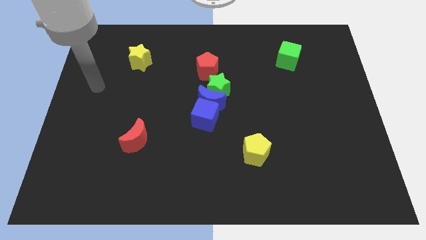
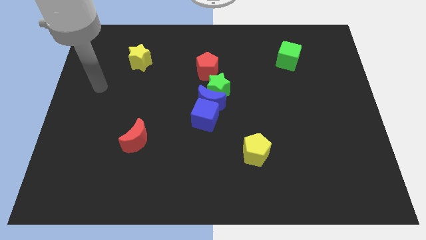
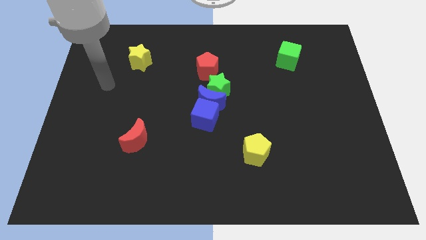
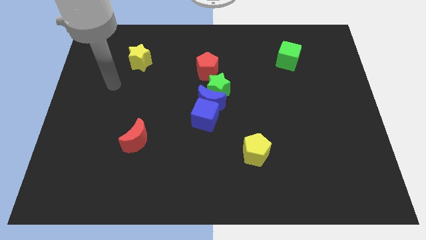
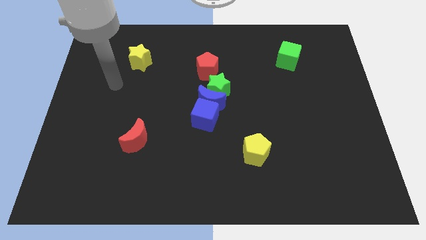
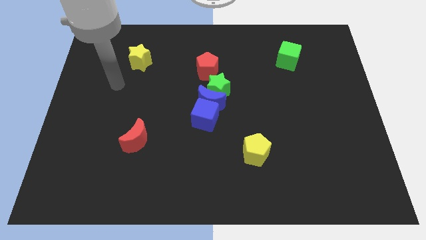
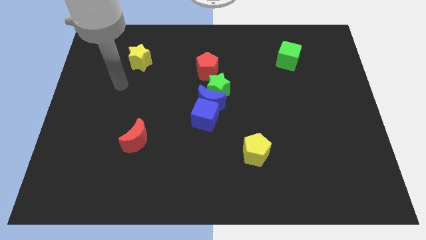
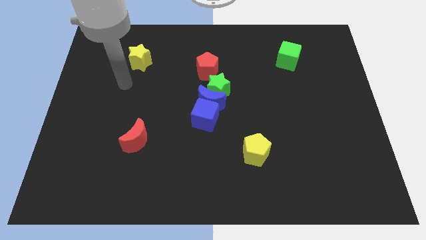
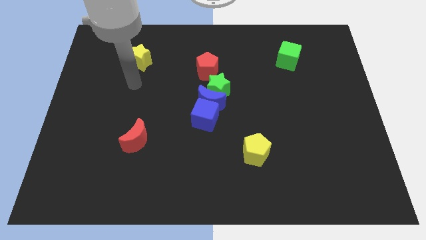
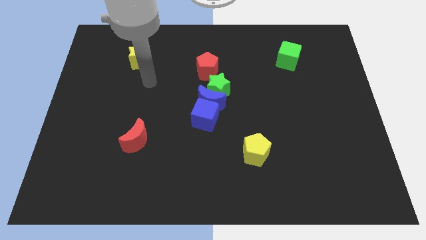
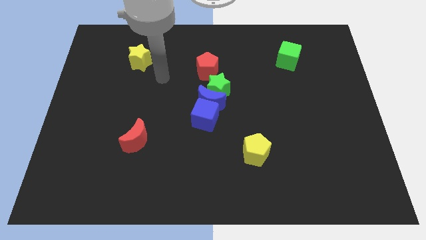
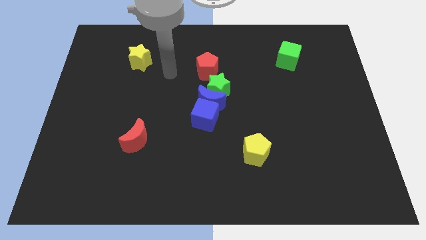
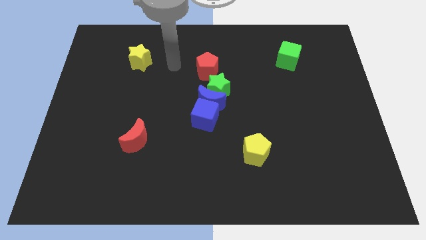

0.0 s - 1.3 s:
point your hand at the left side of the red pentagon

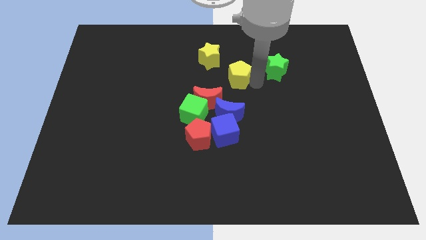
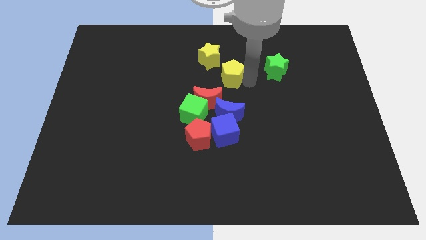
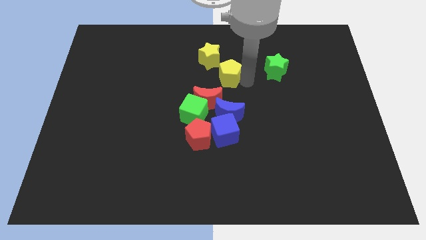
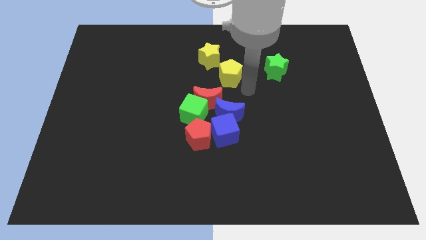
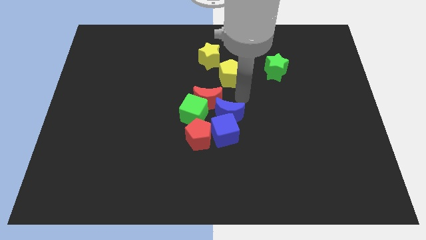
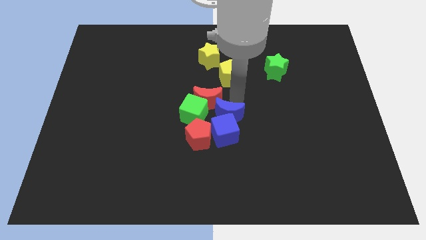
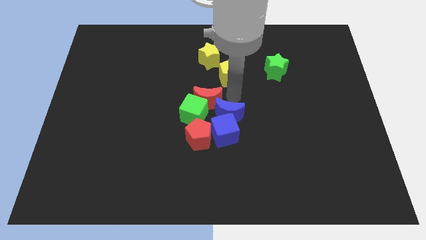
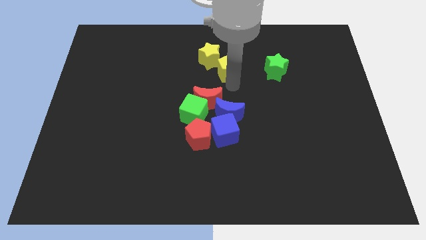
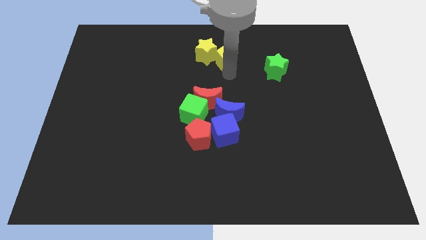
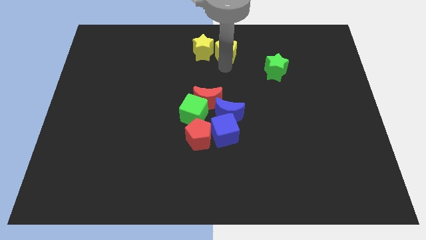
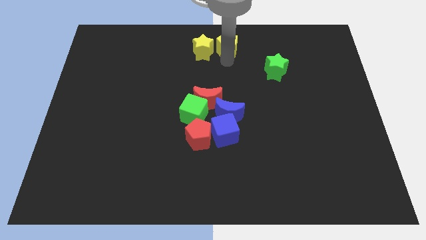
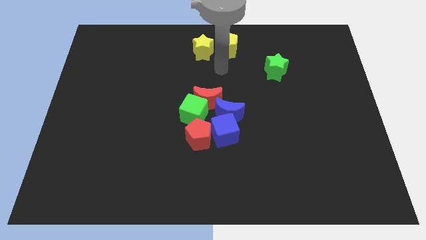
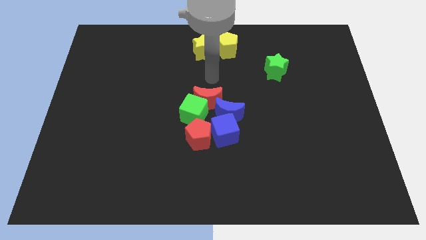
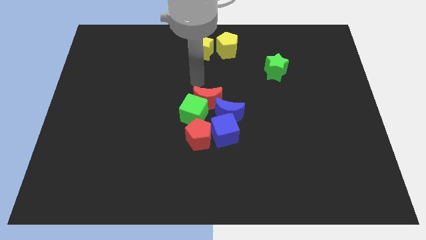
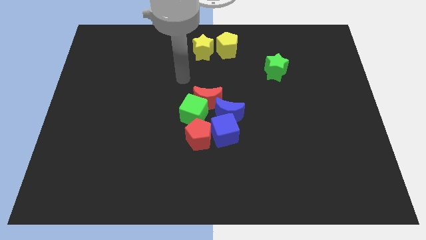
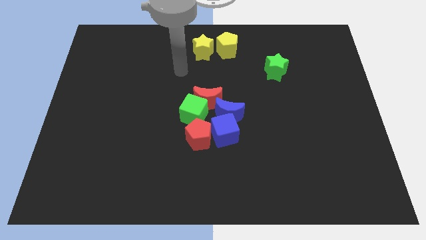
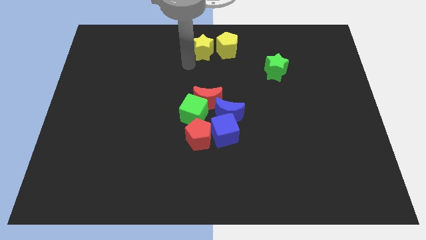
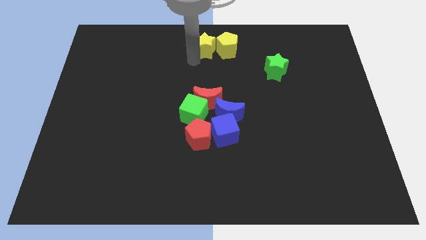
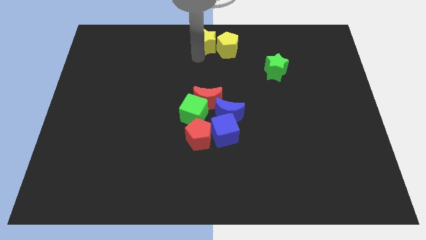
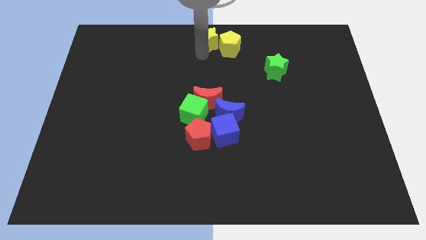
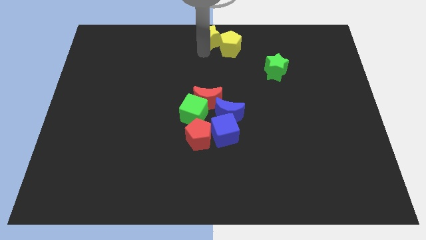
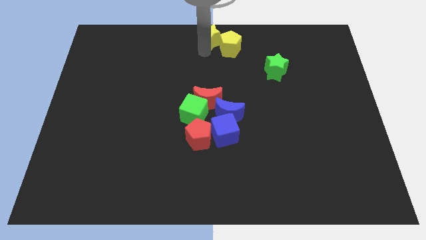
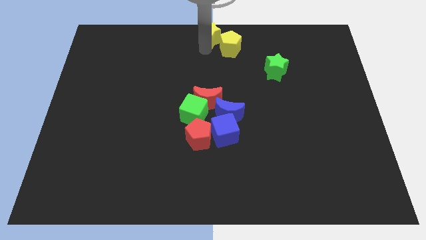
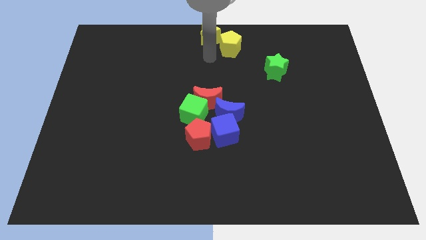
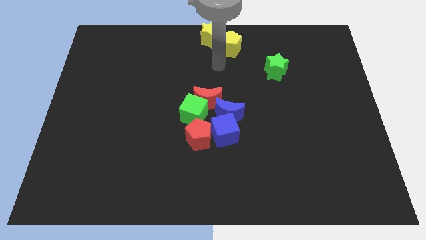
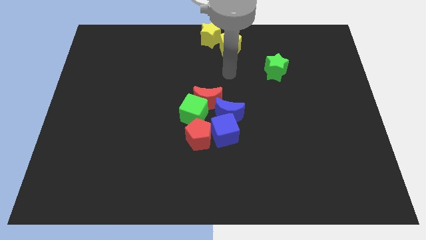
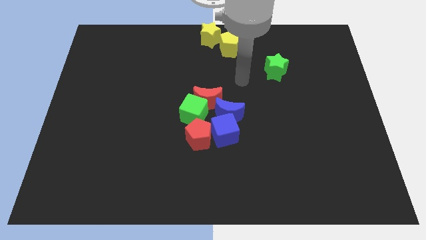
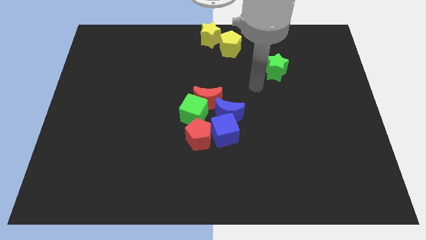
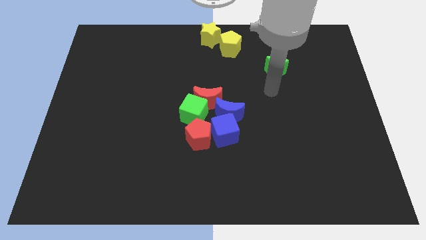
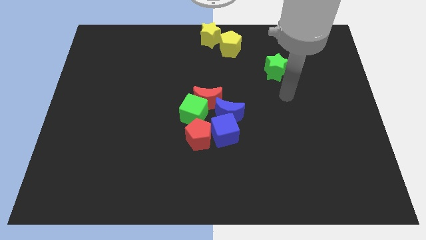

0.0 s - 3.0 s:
move the yellow blocks to the top side

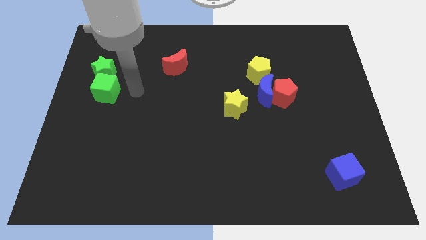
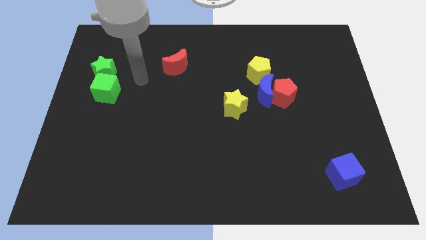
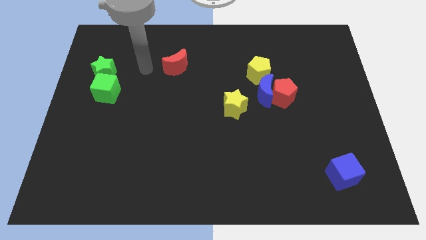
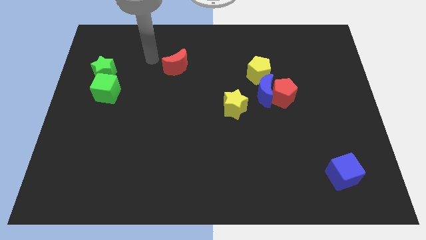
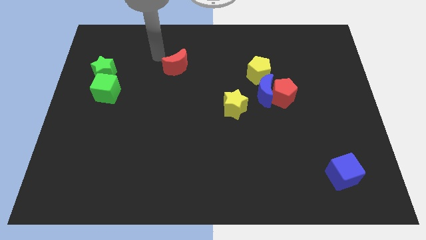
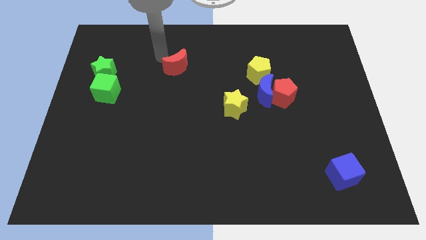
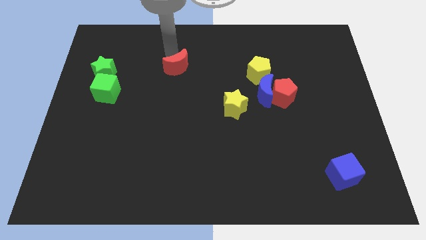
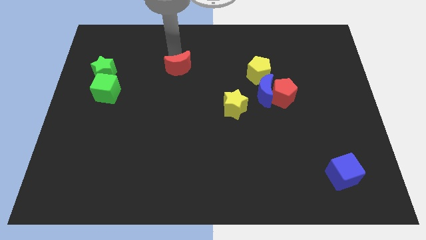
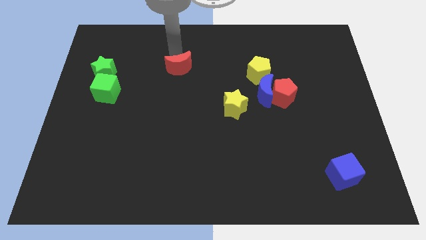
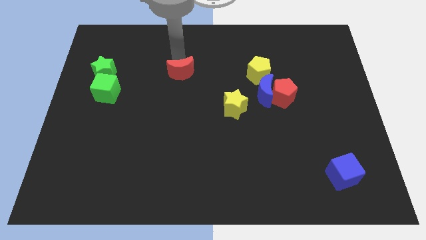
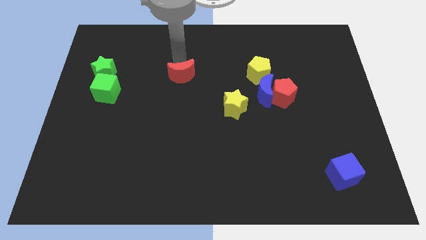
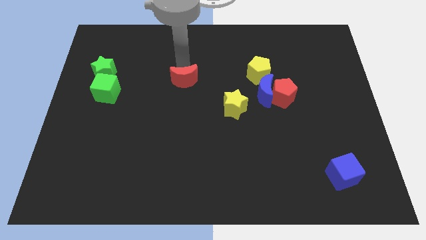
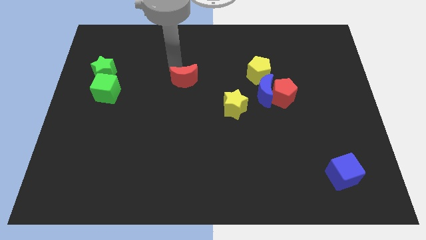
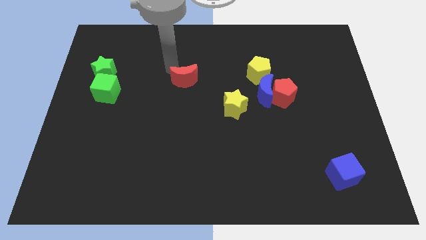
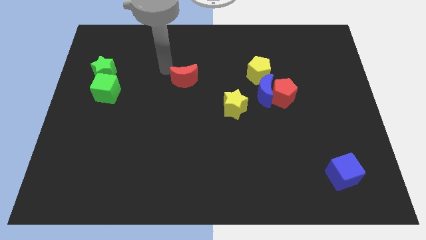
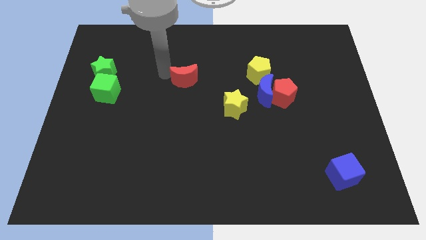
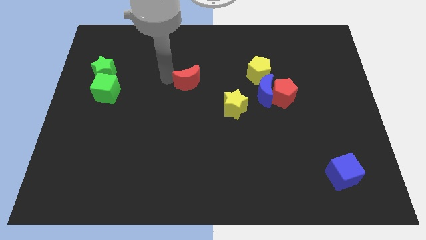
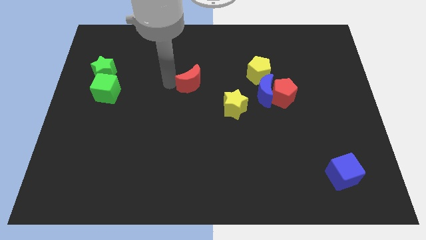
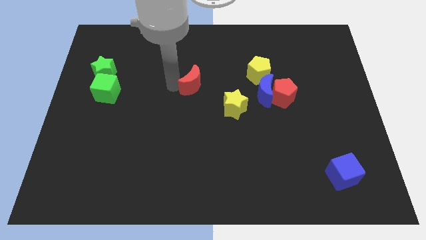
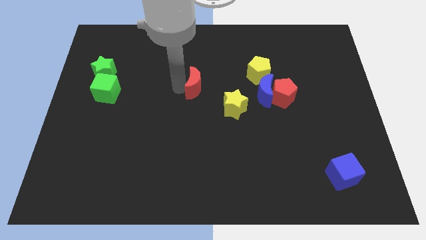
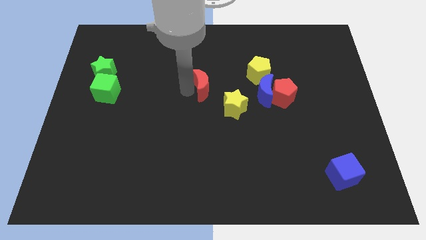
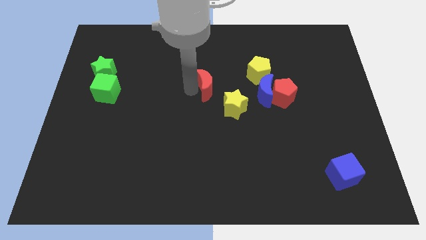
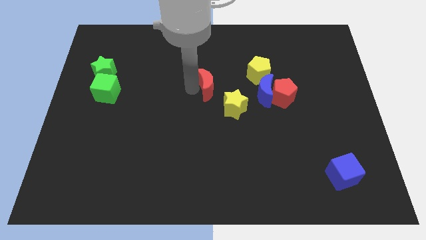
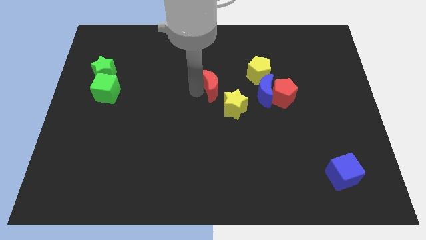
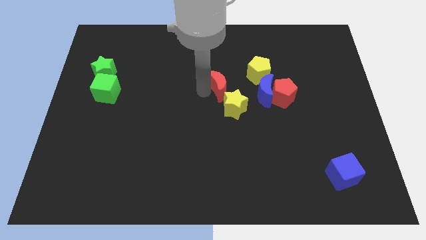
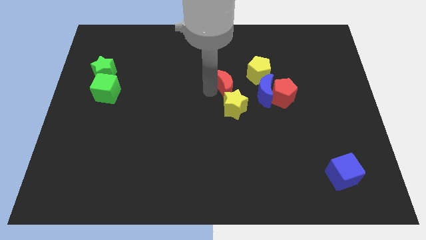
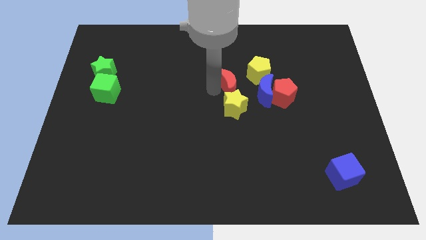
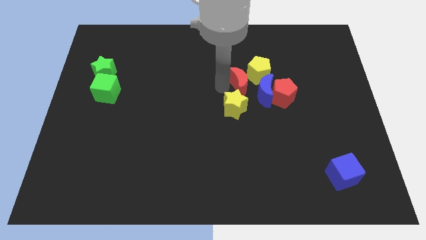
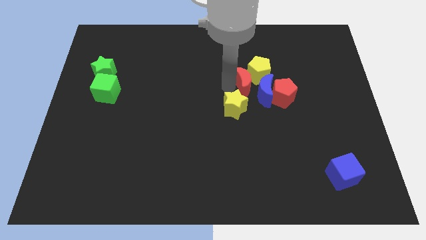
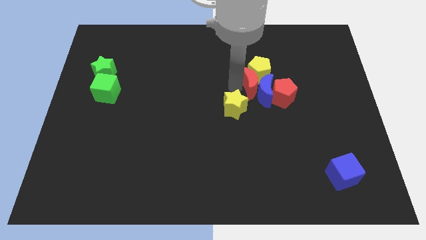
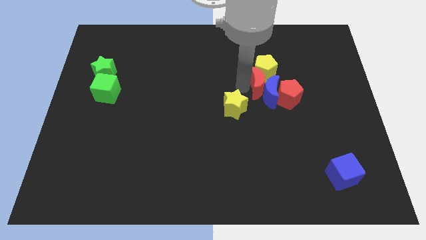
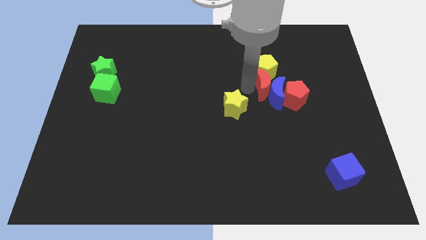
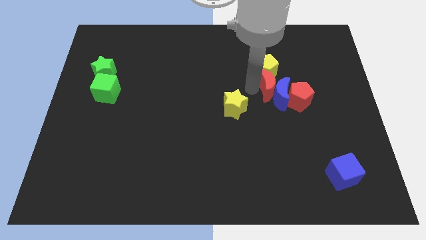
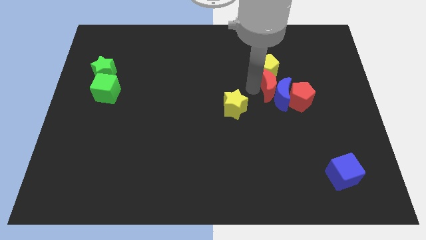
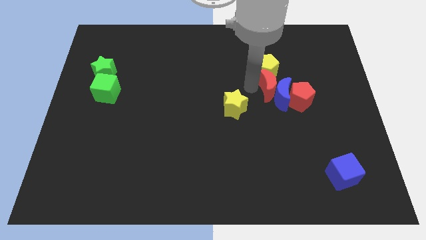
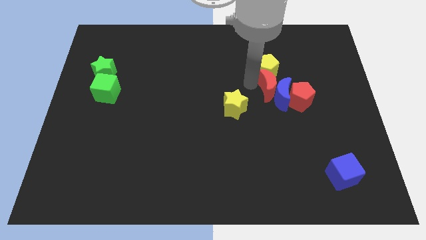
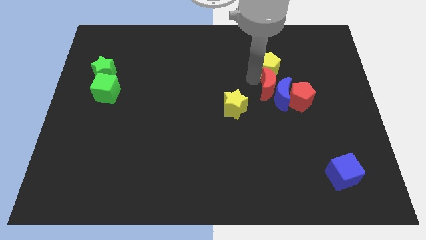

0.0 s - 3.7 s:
push the red crescent to the group of blocks

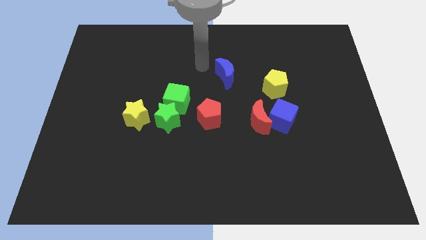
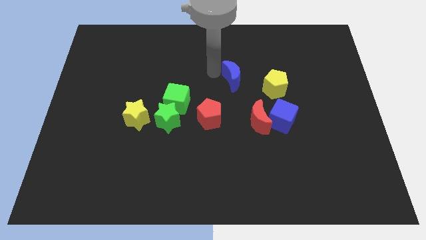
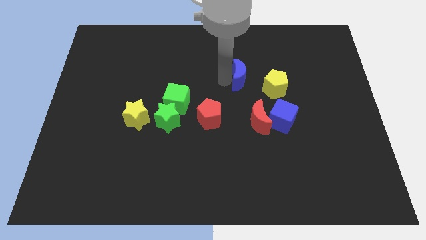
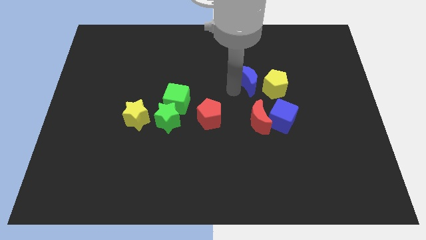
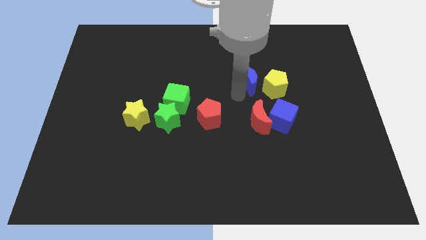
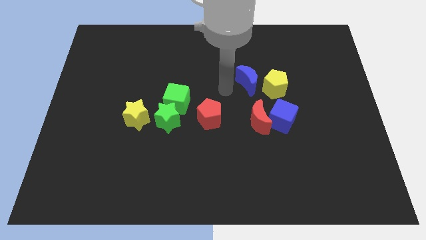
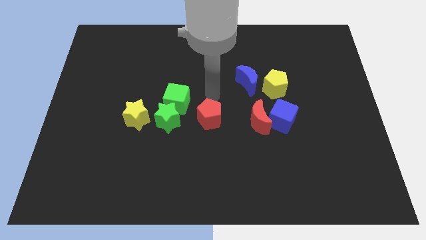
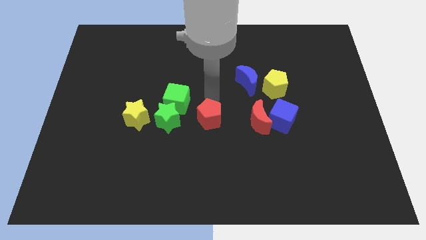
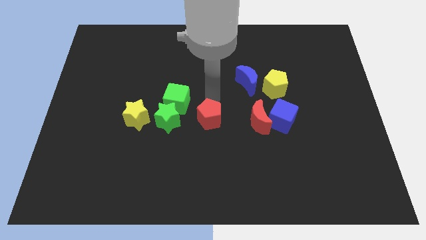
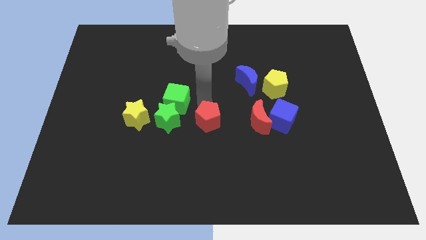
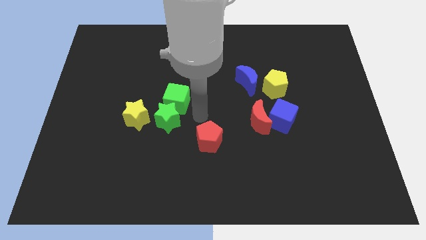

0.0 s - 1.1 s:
push red pentagon slightly down
